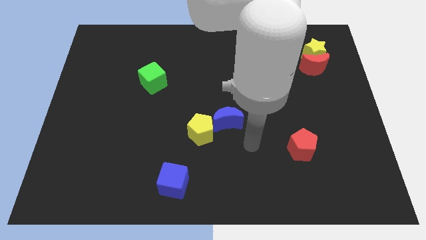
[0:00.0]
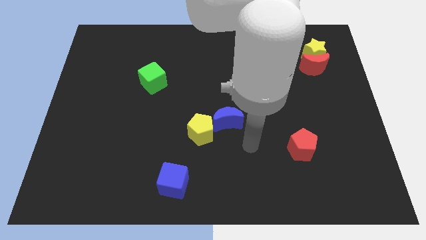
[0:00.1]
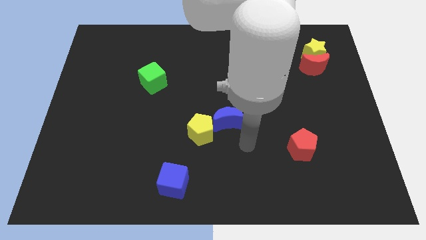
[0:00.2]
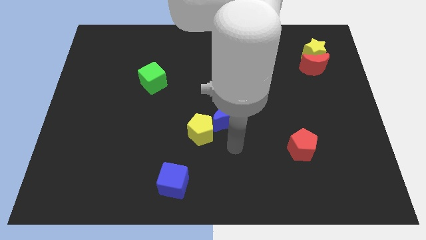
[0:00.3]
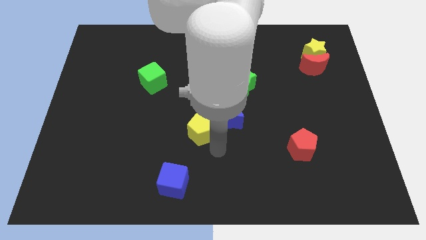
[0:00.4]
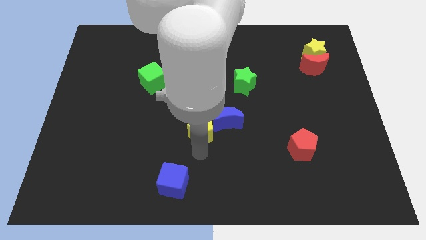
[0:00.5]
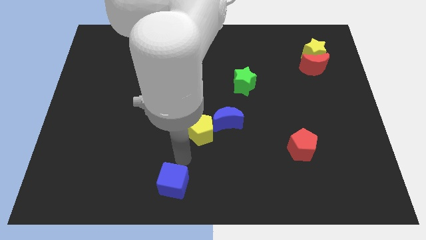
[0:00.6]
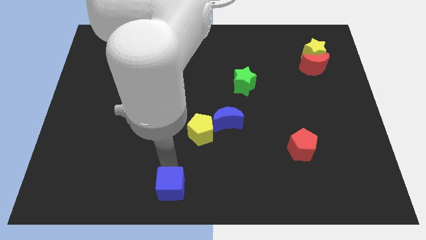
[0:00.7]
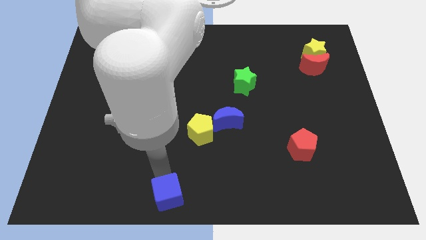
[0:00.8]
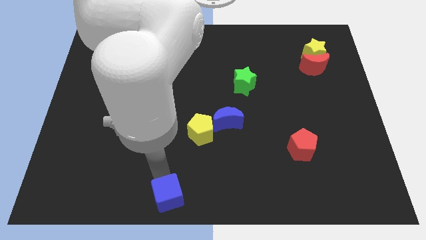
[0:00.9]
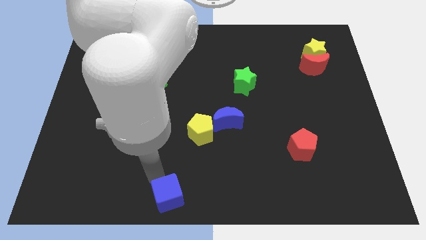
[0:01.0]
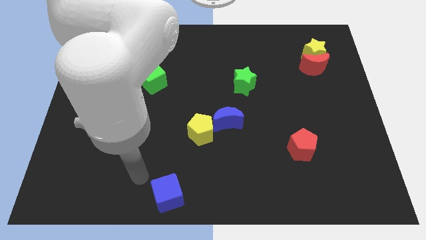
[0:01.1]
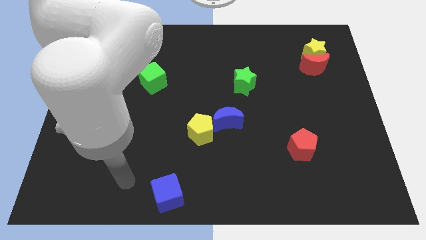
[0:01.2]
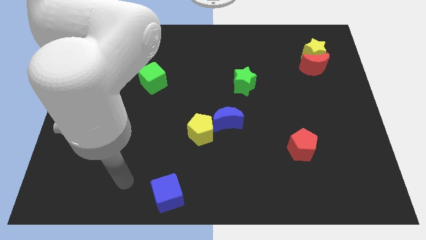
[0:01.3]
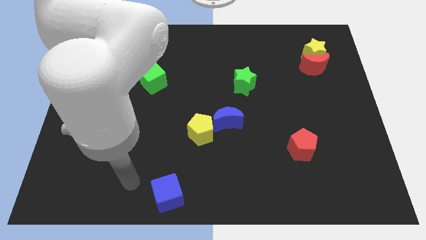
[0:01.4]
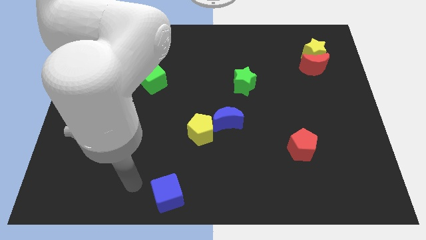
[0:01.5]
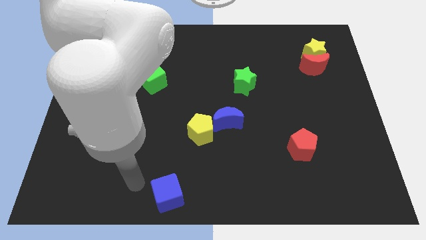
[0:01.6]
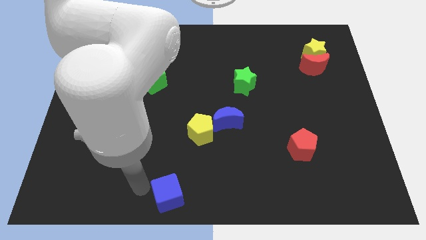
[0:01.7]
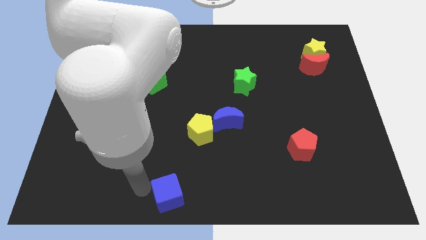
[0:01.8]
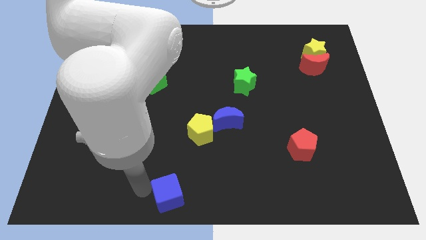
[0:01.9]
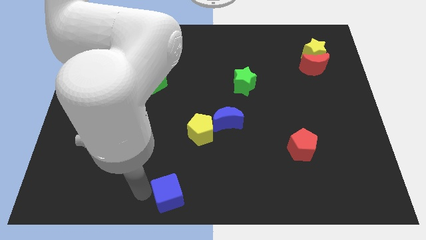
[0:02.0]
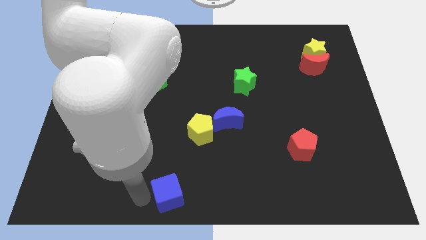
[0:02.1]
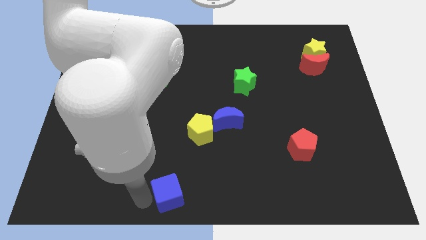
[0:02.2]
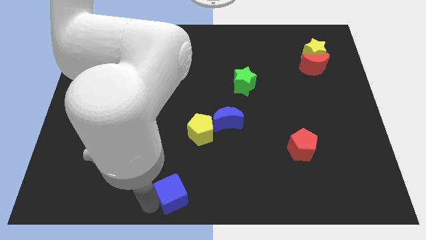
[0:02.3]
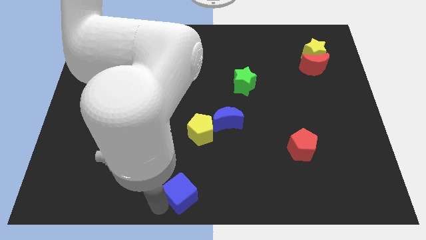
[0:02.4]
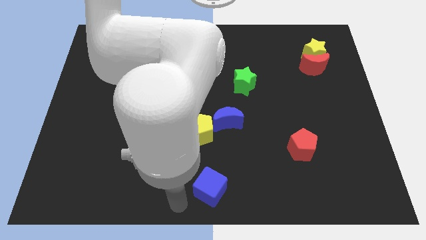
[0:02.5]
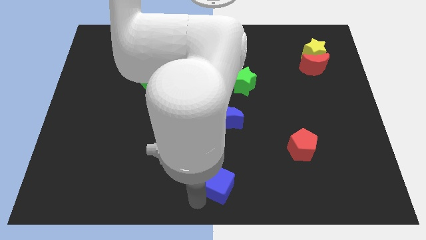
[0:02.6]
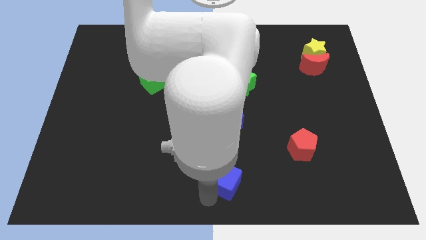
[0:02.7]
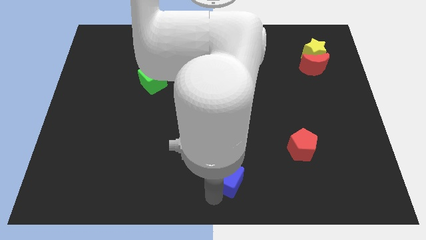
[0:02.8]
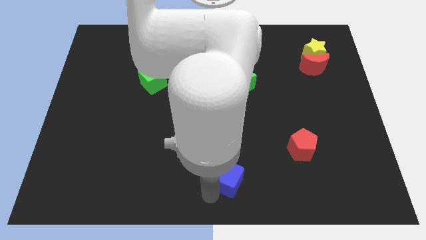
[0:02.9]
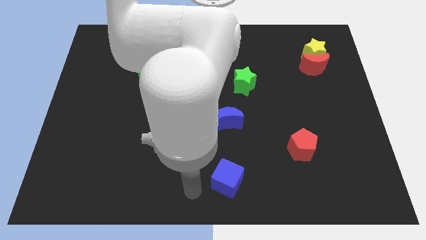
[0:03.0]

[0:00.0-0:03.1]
push the blue cube to the bottom center of the board

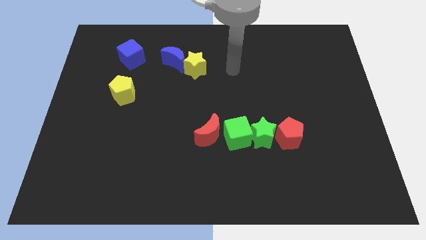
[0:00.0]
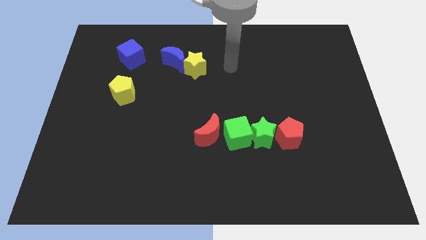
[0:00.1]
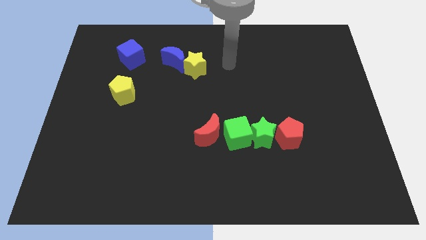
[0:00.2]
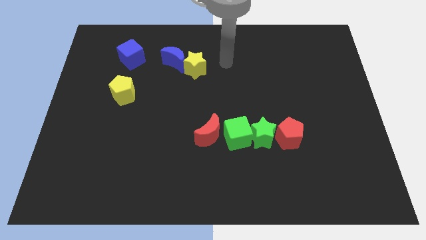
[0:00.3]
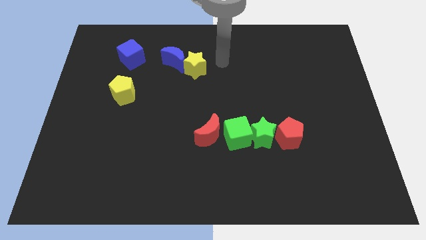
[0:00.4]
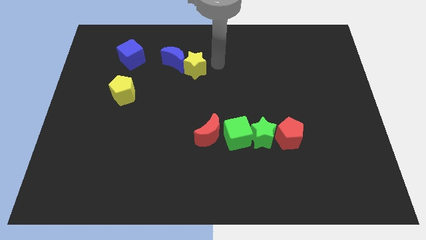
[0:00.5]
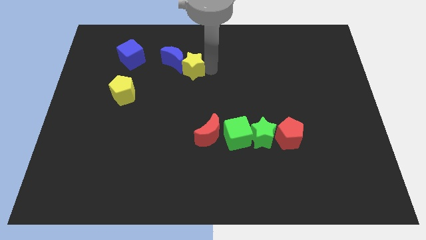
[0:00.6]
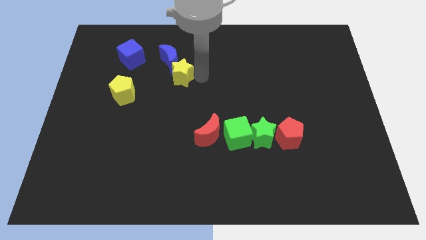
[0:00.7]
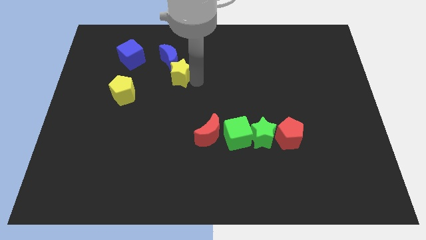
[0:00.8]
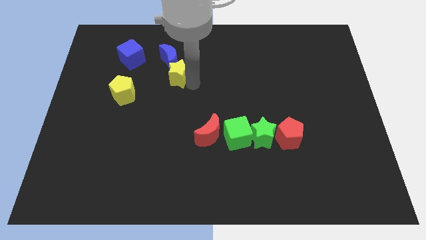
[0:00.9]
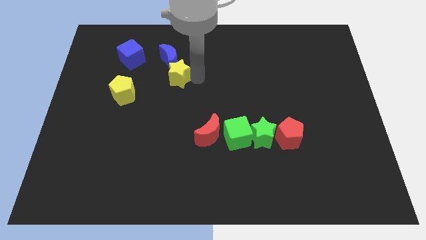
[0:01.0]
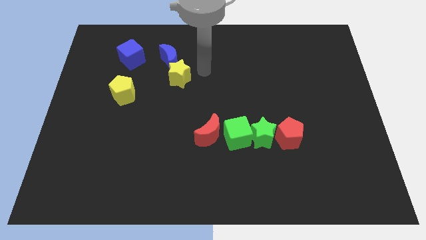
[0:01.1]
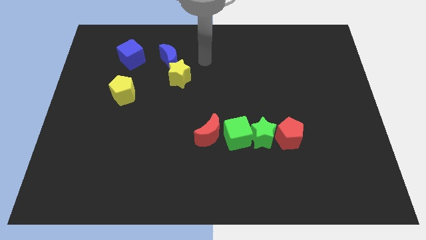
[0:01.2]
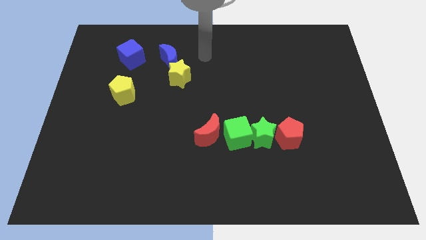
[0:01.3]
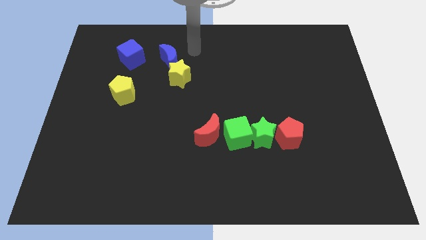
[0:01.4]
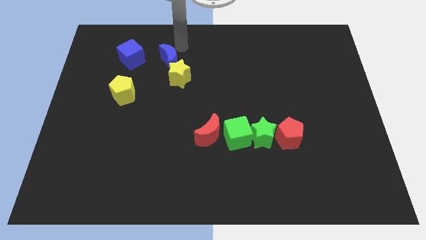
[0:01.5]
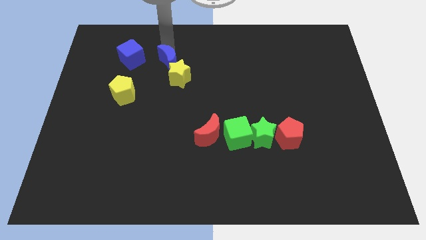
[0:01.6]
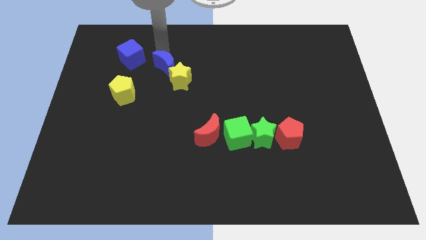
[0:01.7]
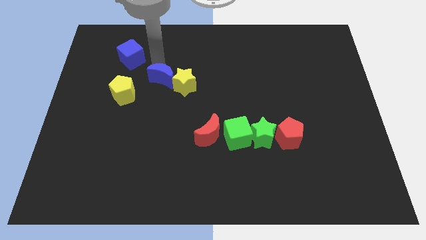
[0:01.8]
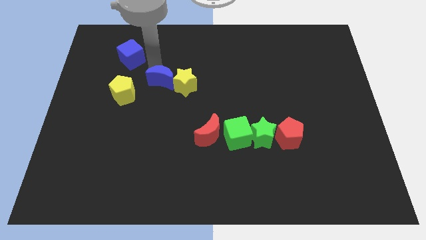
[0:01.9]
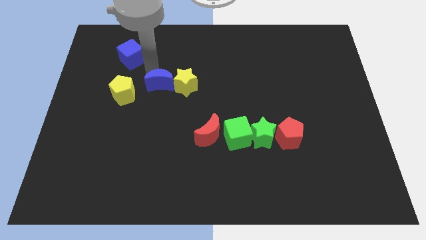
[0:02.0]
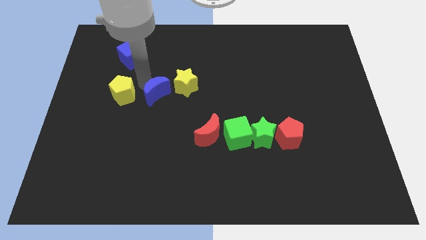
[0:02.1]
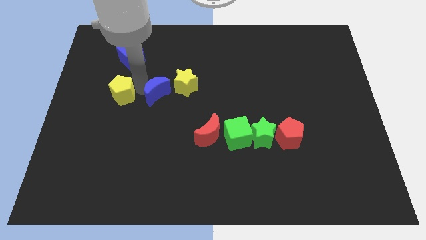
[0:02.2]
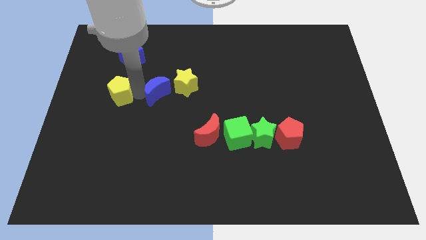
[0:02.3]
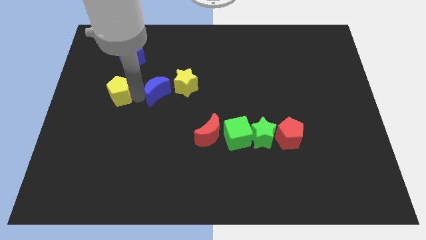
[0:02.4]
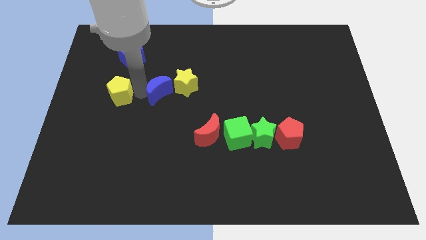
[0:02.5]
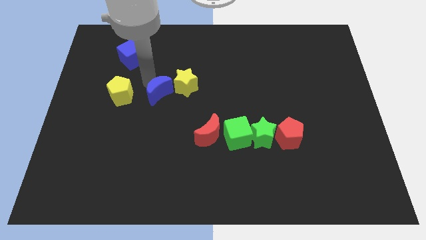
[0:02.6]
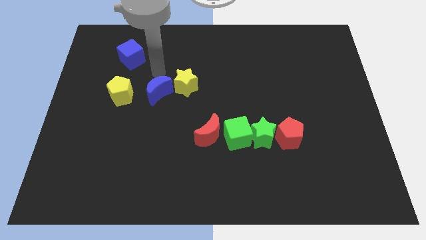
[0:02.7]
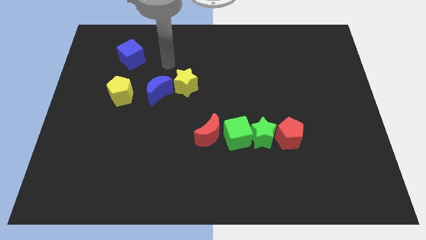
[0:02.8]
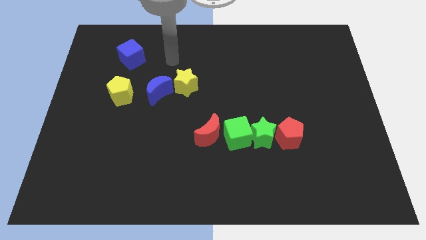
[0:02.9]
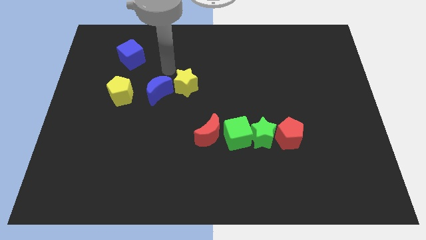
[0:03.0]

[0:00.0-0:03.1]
place the blue crescent to the right of the yellow pentagon

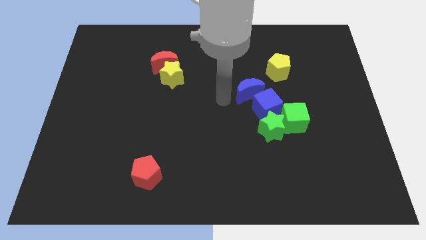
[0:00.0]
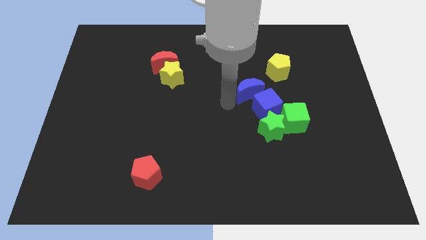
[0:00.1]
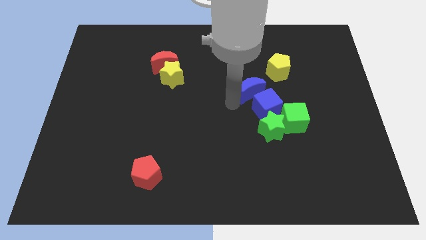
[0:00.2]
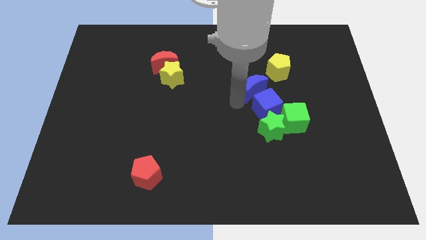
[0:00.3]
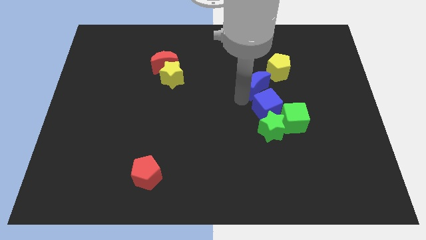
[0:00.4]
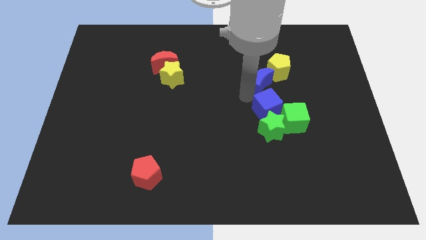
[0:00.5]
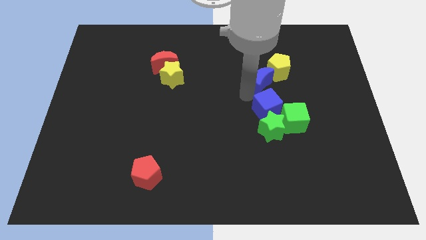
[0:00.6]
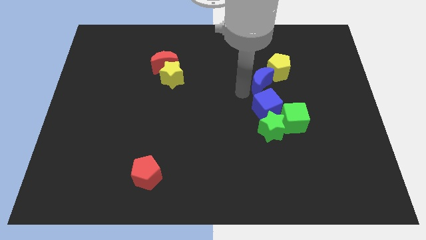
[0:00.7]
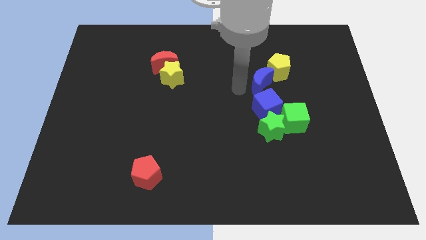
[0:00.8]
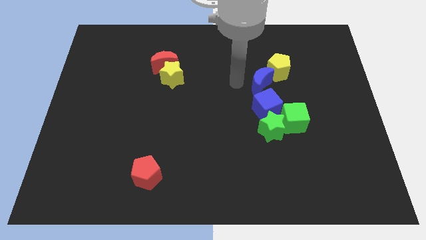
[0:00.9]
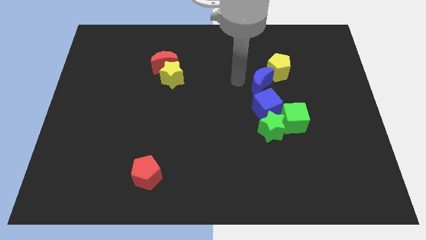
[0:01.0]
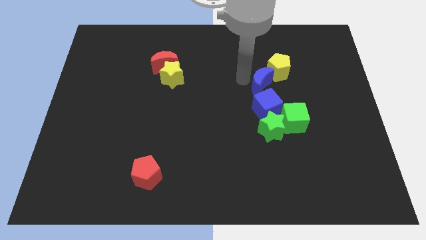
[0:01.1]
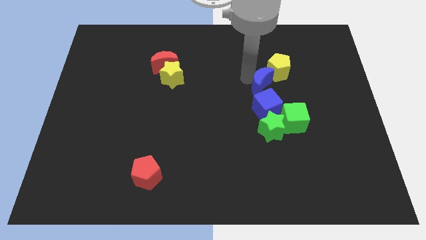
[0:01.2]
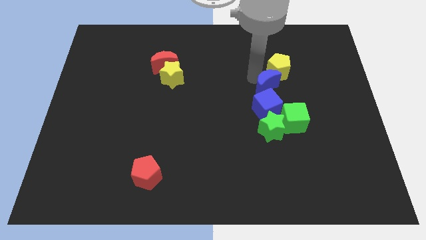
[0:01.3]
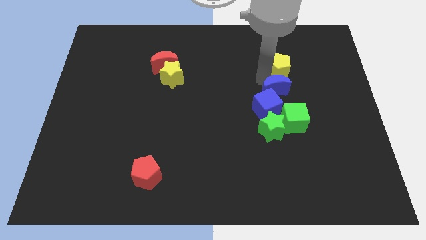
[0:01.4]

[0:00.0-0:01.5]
push the blue crescent in between the yellow pentagon and blue cube

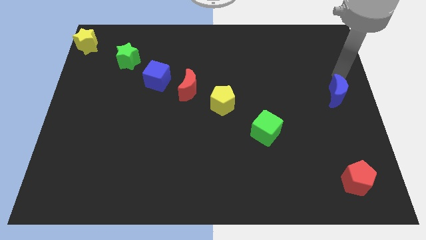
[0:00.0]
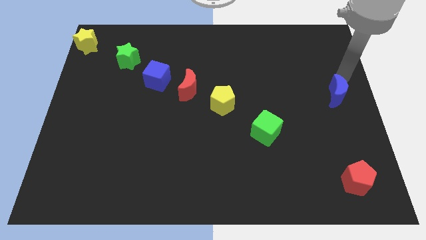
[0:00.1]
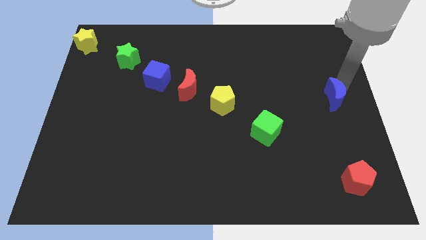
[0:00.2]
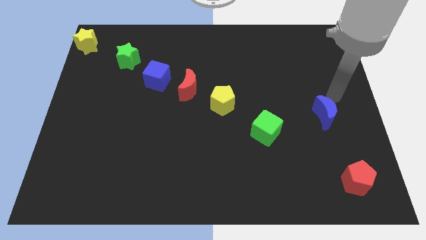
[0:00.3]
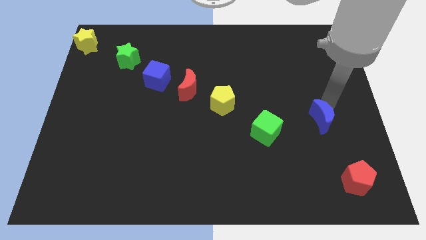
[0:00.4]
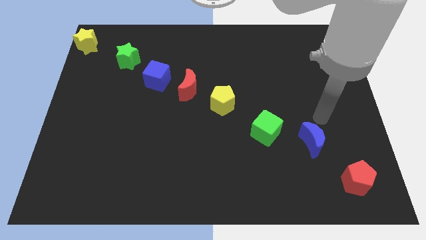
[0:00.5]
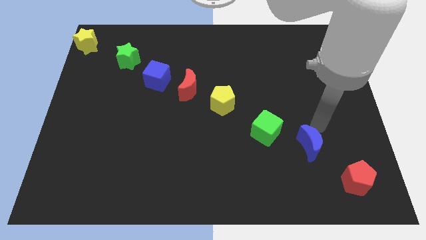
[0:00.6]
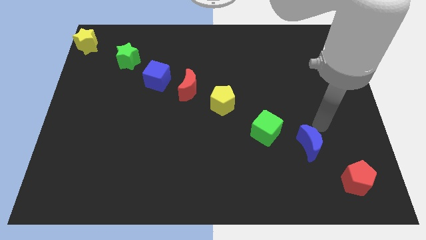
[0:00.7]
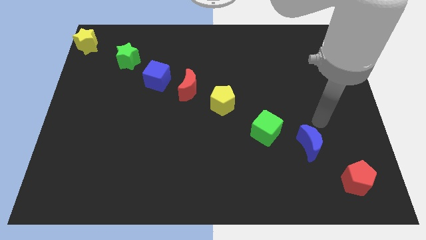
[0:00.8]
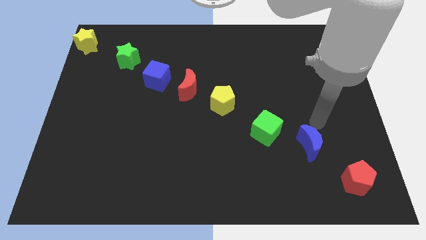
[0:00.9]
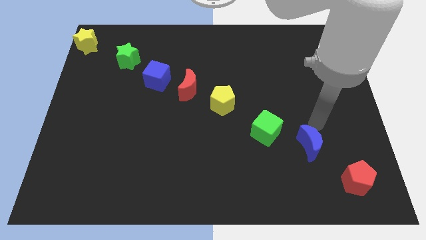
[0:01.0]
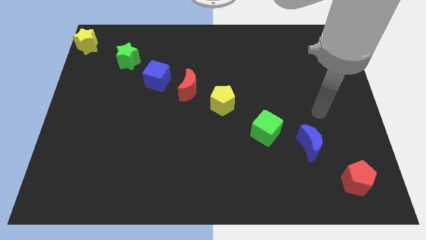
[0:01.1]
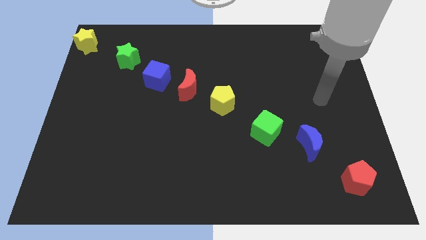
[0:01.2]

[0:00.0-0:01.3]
place blue crescent above red pentagon
